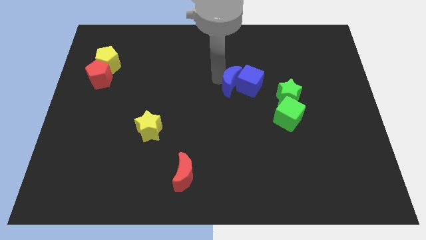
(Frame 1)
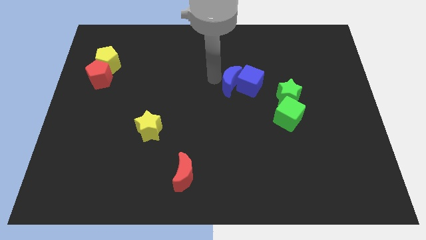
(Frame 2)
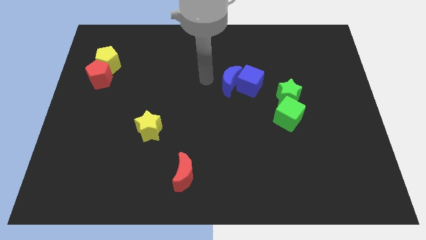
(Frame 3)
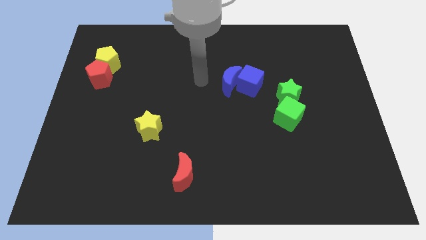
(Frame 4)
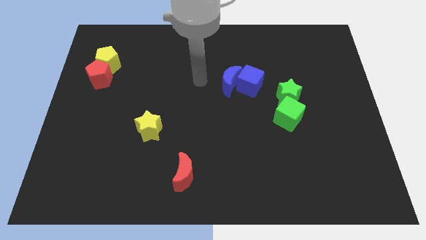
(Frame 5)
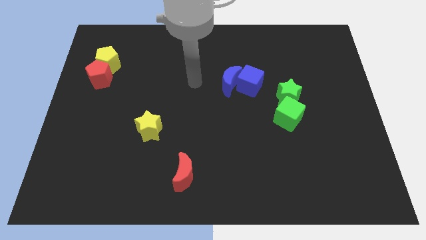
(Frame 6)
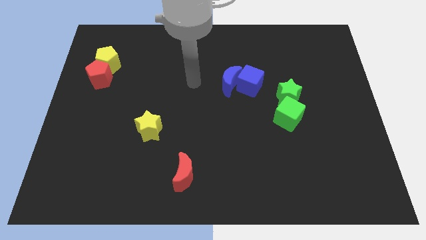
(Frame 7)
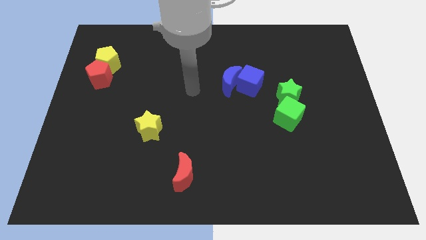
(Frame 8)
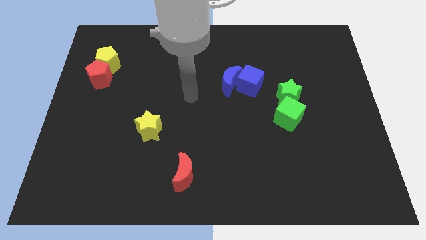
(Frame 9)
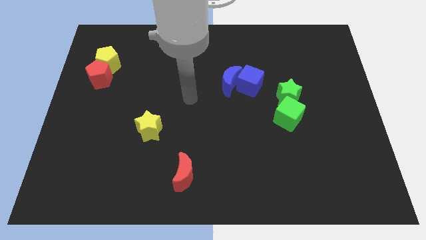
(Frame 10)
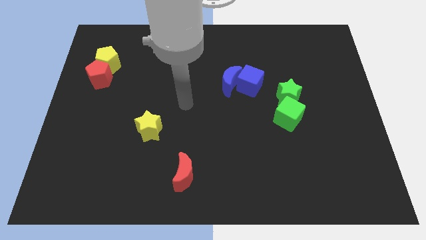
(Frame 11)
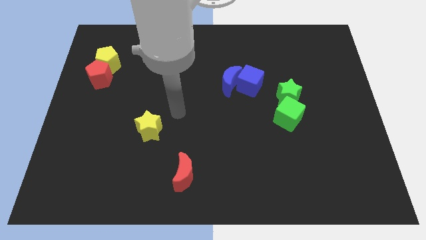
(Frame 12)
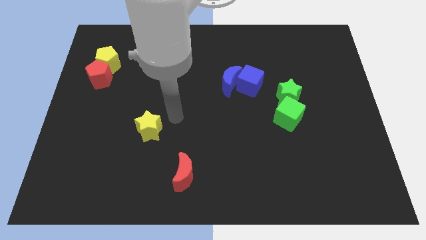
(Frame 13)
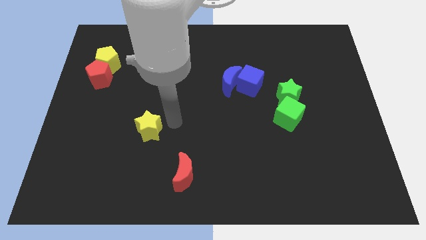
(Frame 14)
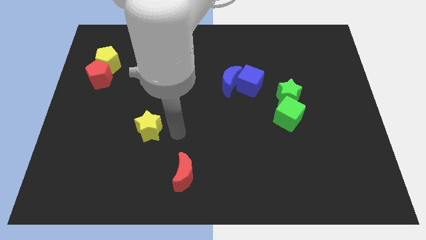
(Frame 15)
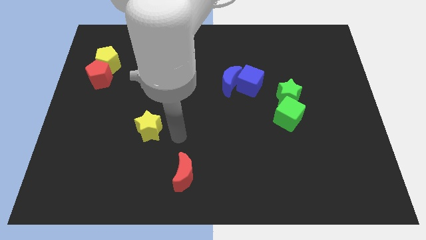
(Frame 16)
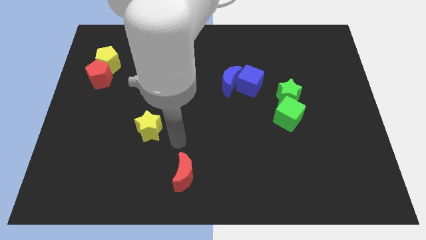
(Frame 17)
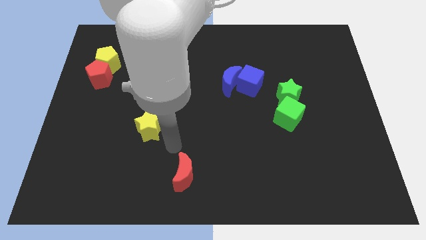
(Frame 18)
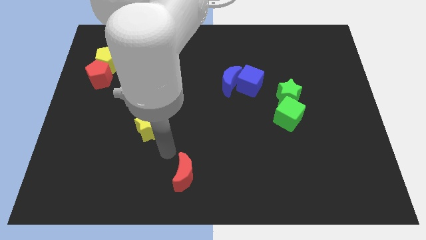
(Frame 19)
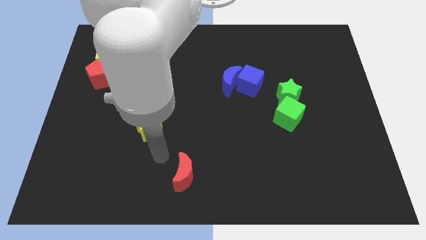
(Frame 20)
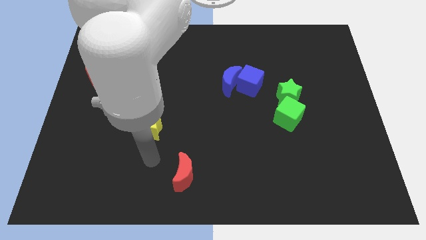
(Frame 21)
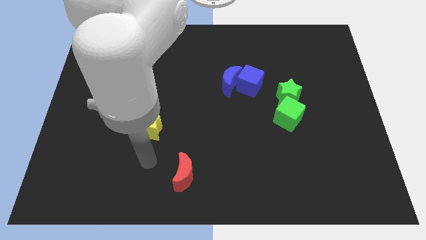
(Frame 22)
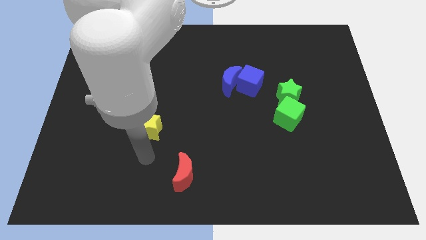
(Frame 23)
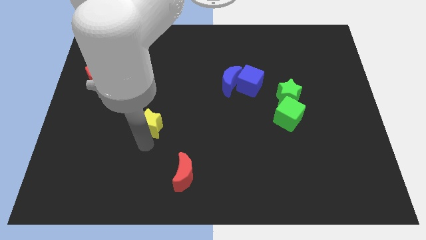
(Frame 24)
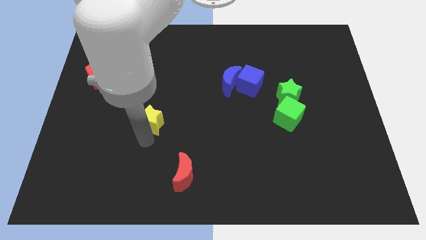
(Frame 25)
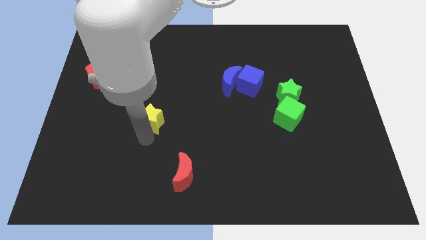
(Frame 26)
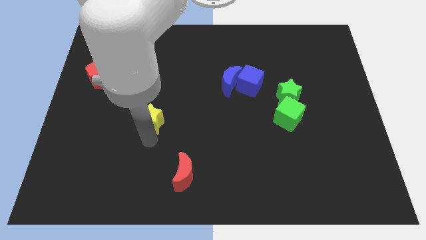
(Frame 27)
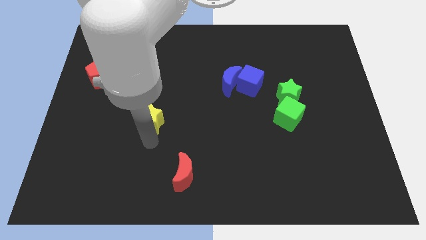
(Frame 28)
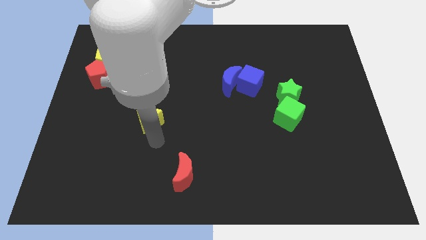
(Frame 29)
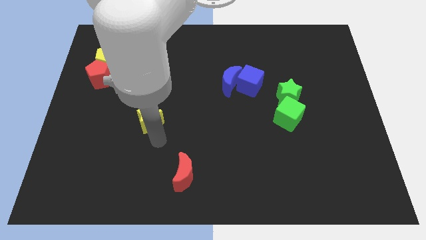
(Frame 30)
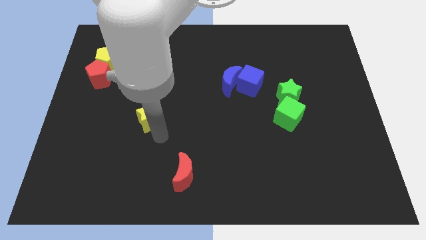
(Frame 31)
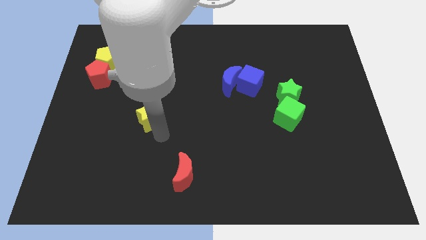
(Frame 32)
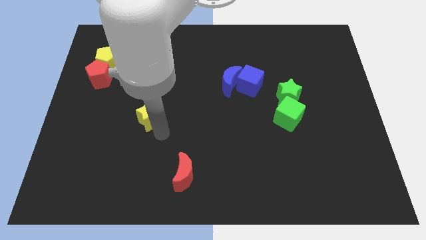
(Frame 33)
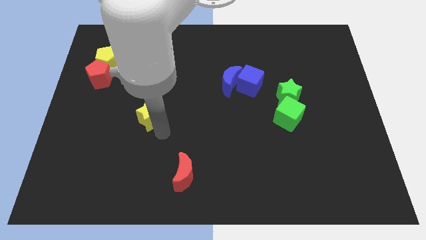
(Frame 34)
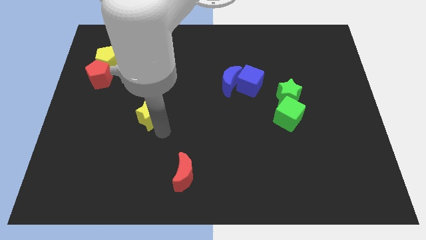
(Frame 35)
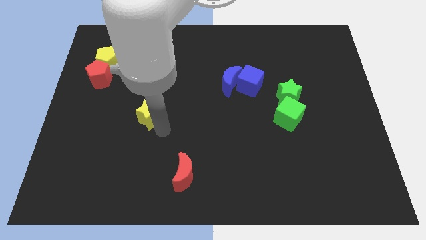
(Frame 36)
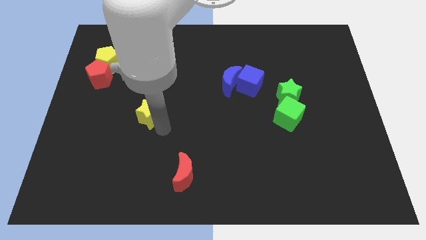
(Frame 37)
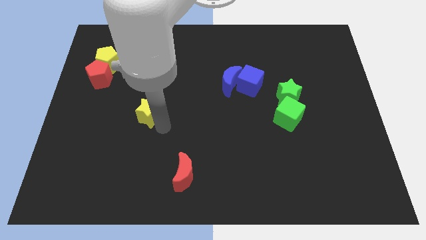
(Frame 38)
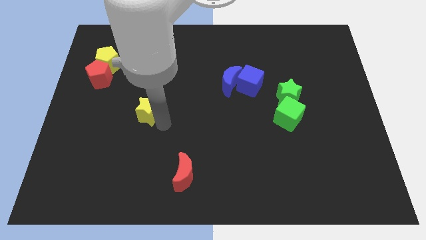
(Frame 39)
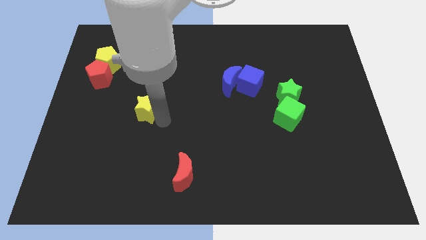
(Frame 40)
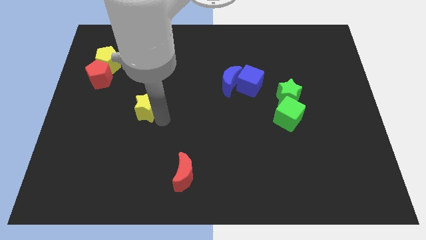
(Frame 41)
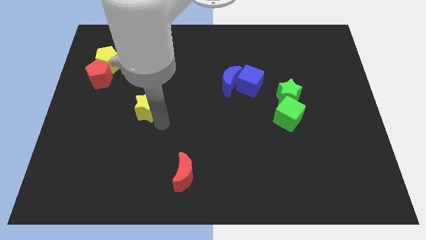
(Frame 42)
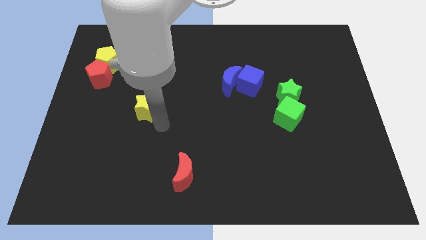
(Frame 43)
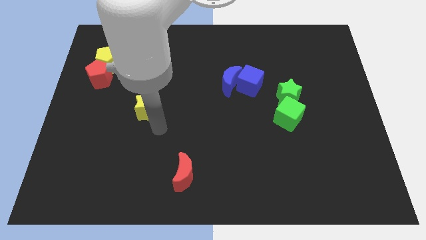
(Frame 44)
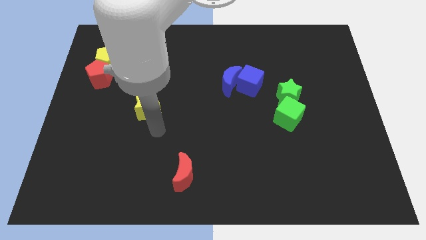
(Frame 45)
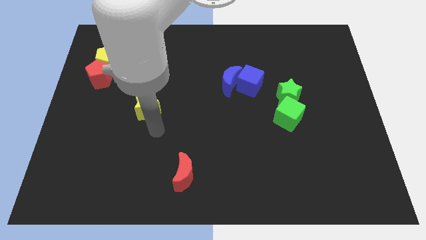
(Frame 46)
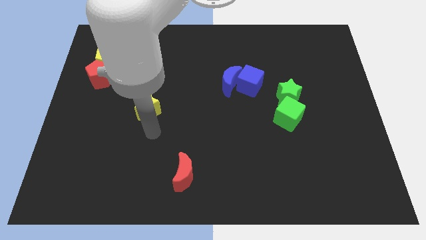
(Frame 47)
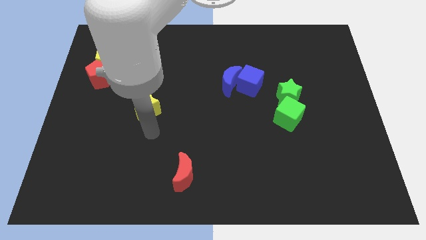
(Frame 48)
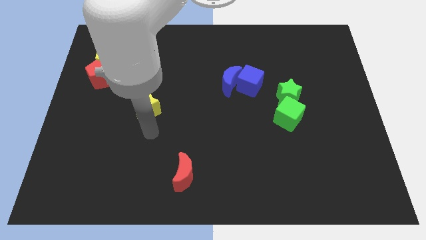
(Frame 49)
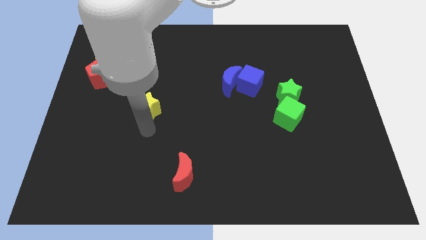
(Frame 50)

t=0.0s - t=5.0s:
slightly push the yellow star towards the top of the board

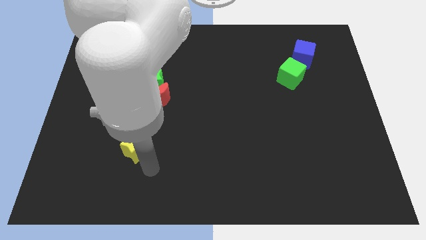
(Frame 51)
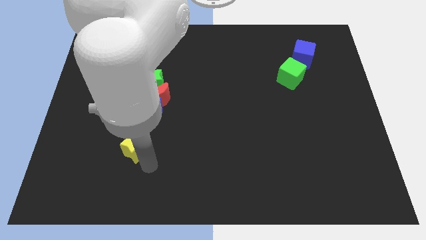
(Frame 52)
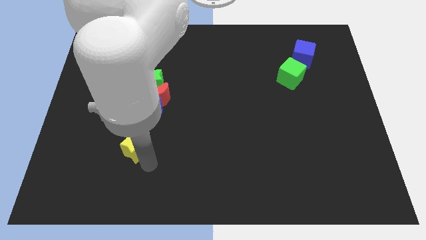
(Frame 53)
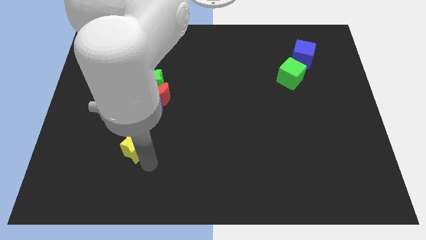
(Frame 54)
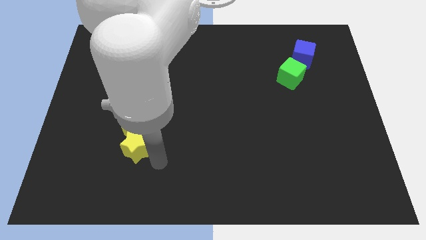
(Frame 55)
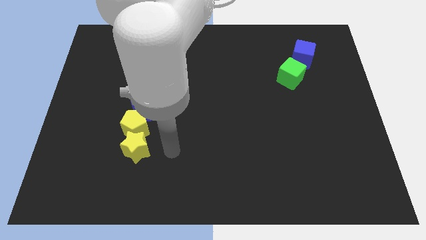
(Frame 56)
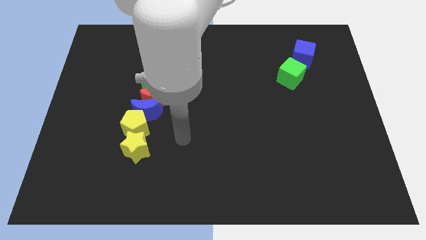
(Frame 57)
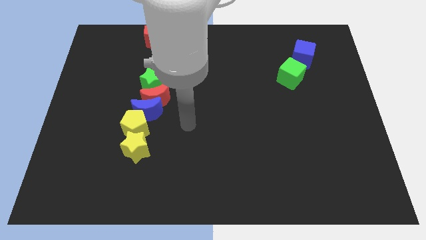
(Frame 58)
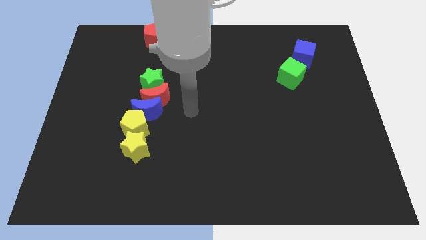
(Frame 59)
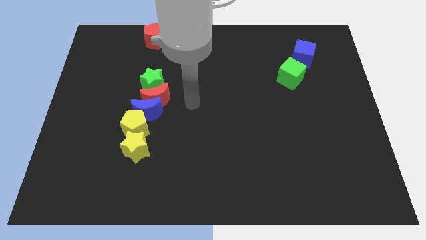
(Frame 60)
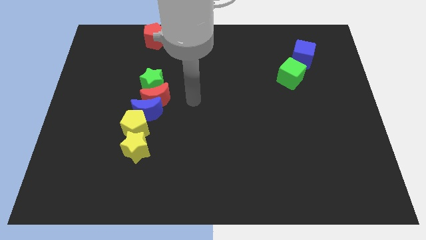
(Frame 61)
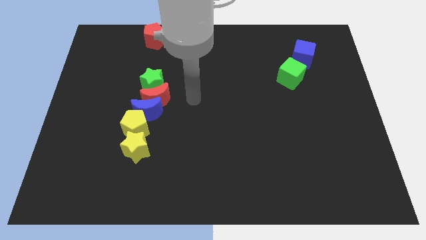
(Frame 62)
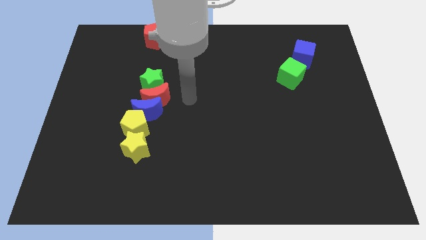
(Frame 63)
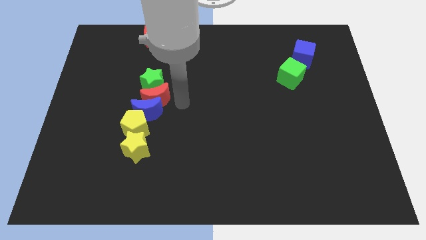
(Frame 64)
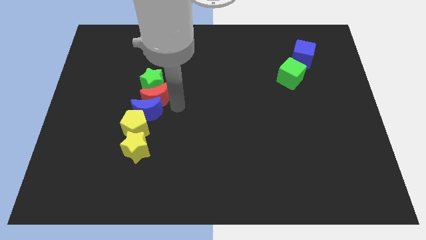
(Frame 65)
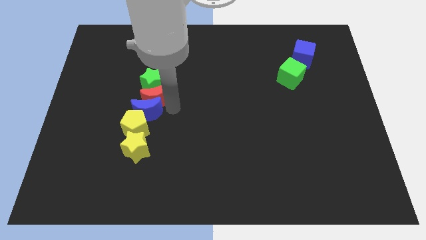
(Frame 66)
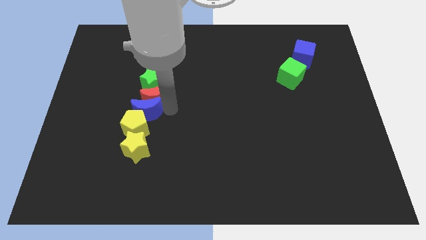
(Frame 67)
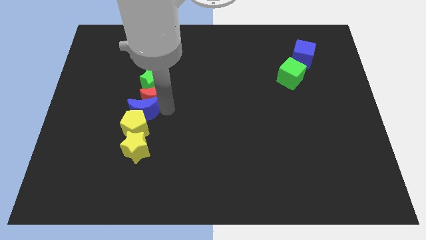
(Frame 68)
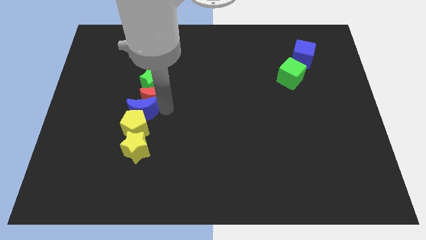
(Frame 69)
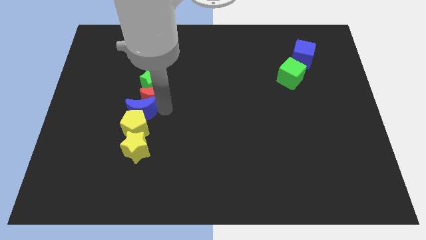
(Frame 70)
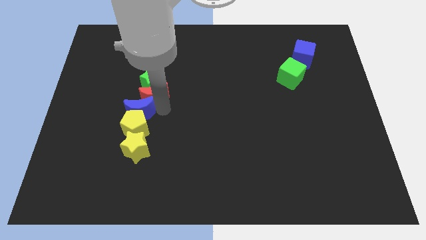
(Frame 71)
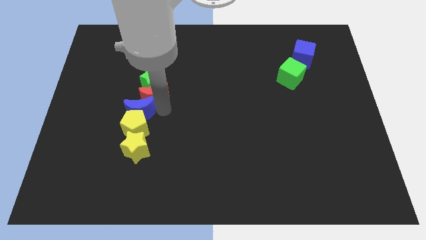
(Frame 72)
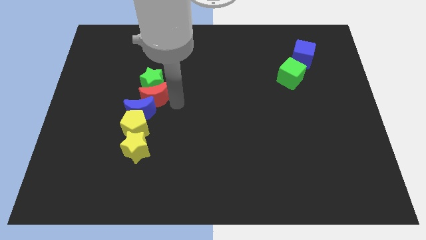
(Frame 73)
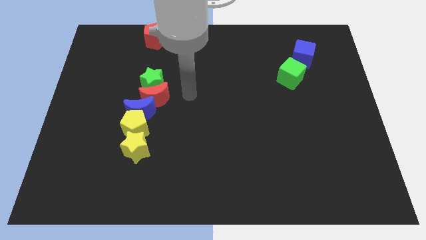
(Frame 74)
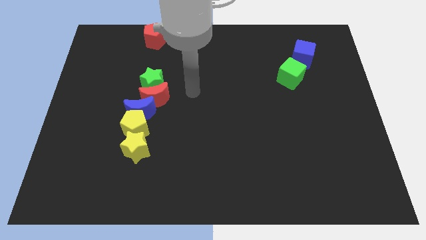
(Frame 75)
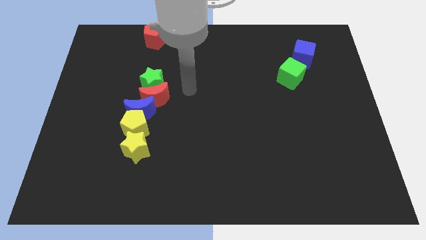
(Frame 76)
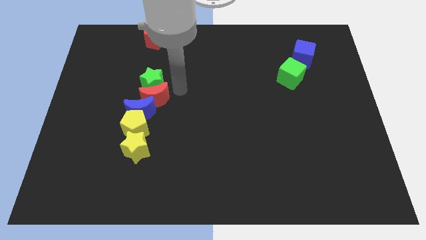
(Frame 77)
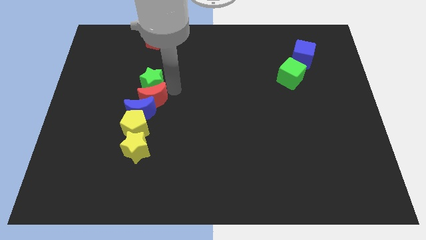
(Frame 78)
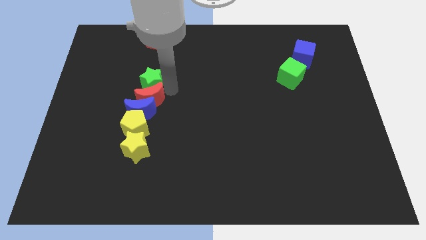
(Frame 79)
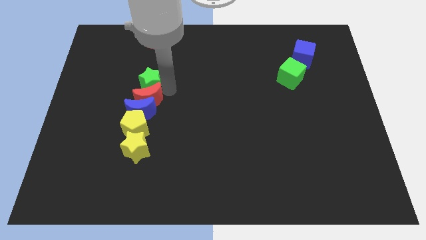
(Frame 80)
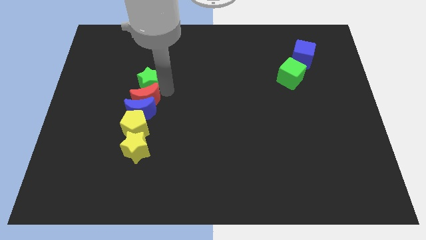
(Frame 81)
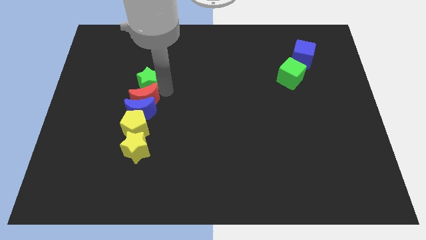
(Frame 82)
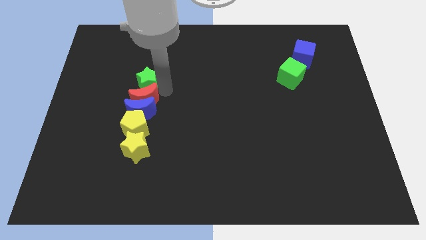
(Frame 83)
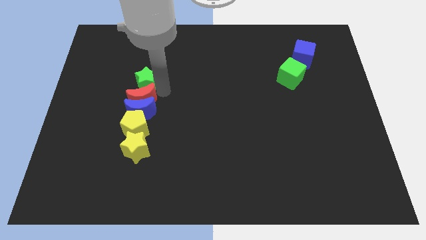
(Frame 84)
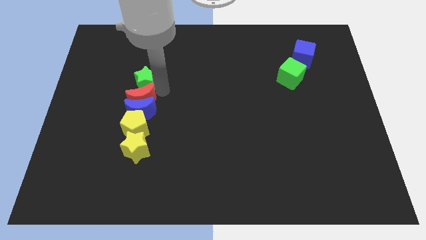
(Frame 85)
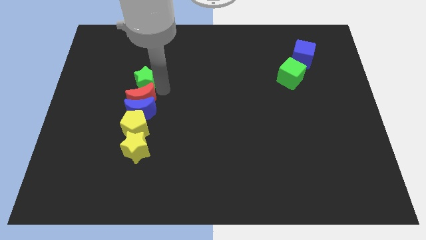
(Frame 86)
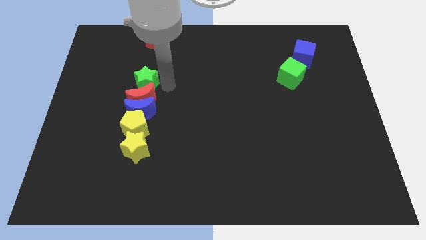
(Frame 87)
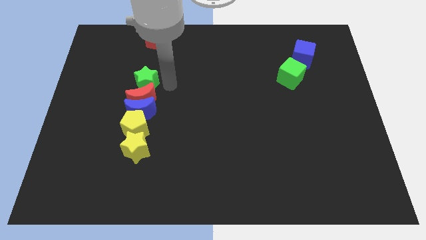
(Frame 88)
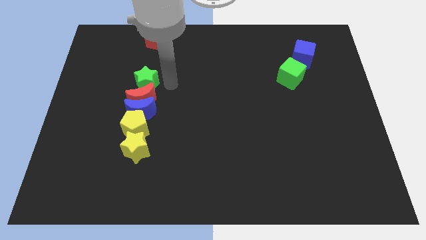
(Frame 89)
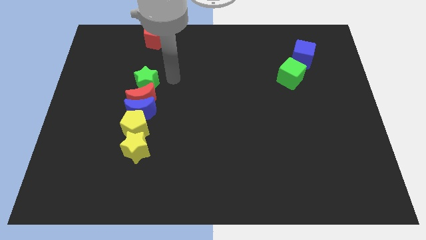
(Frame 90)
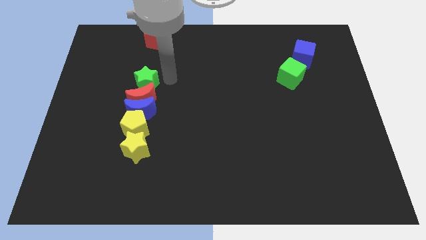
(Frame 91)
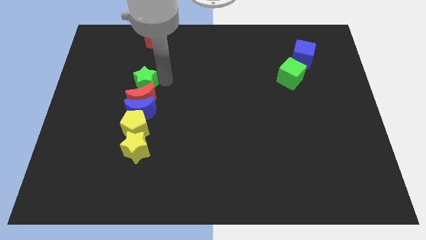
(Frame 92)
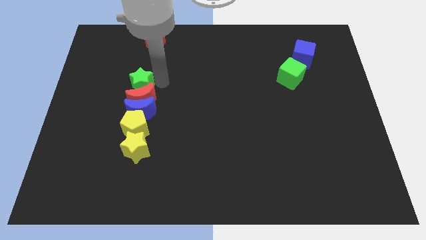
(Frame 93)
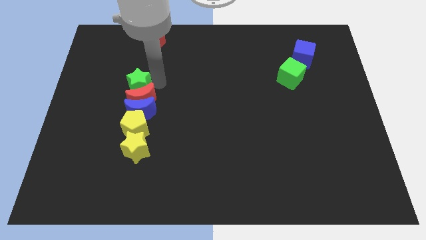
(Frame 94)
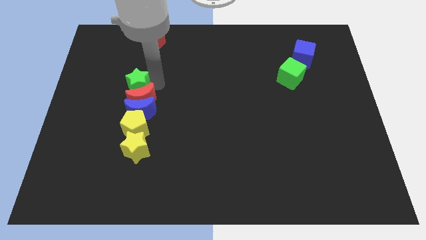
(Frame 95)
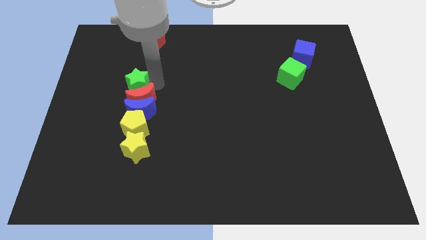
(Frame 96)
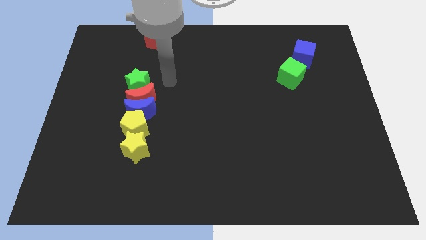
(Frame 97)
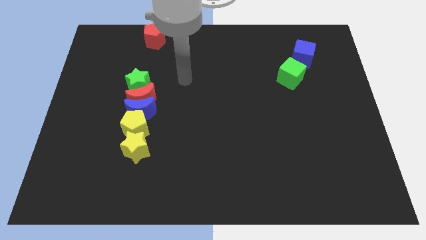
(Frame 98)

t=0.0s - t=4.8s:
adjust crescents and green star in a vertical line
